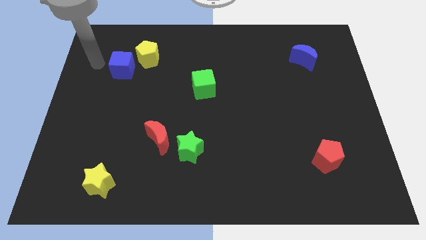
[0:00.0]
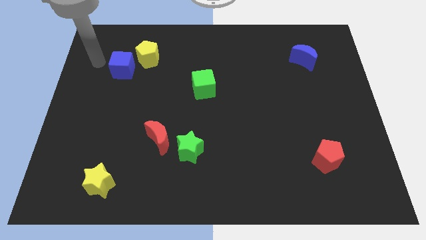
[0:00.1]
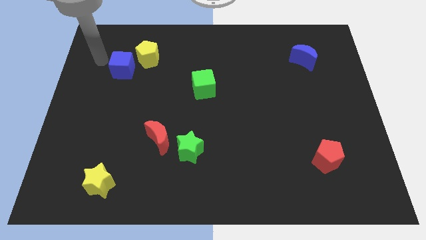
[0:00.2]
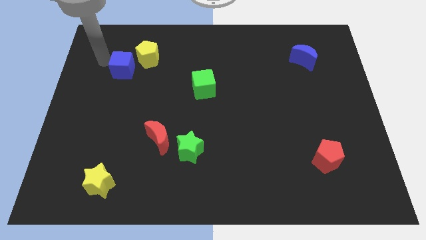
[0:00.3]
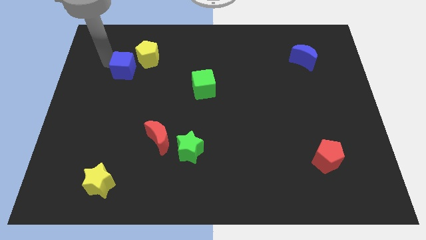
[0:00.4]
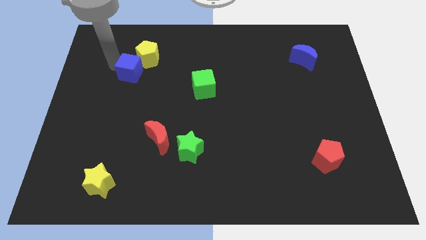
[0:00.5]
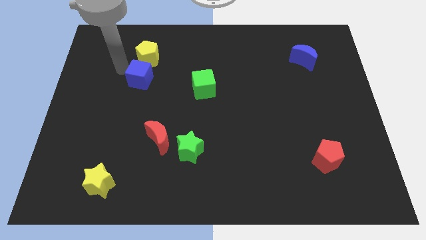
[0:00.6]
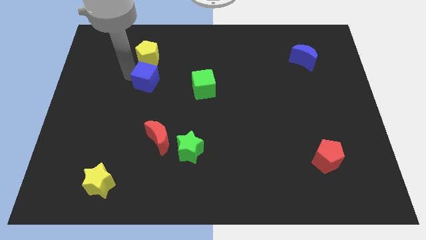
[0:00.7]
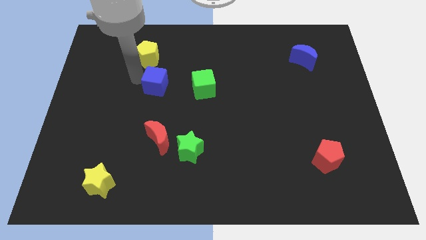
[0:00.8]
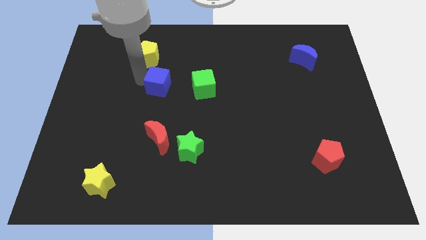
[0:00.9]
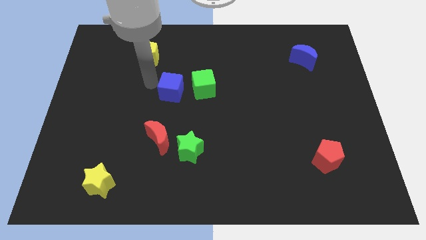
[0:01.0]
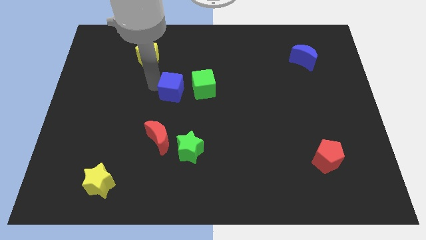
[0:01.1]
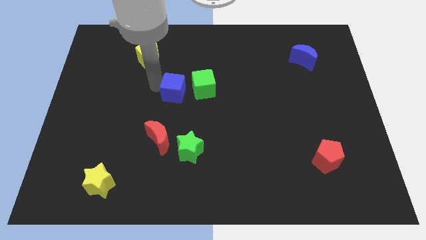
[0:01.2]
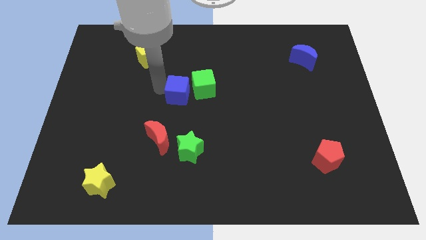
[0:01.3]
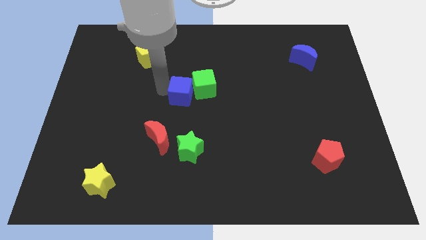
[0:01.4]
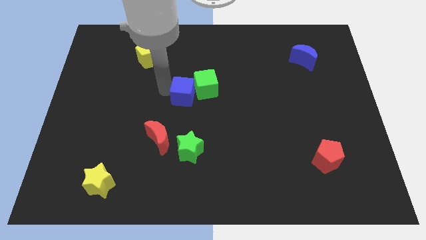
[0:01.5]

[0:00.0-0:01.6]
move the blue cube into the left side of the green cube

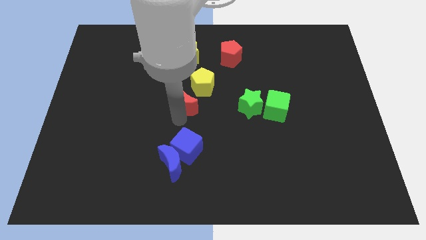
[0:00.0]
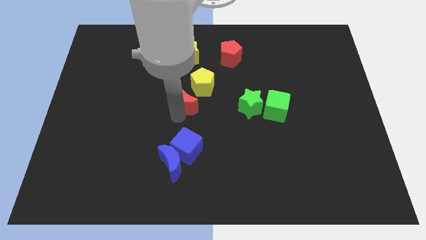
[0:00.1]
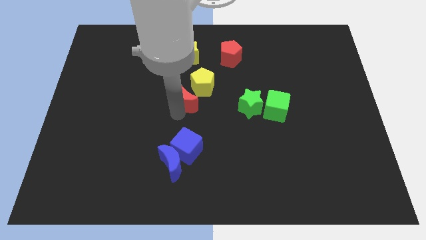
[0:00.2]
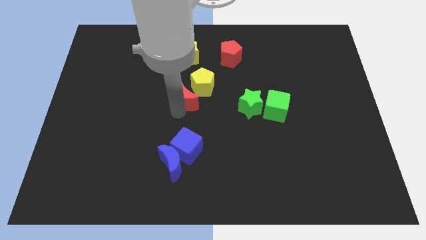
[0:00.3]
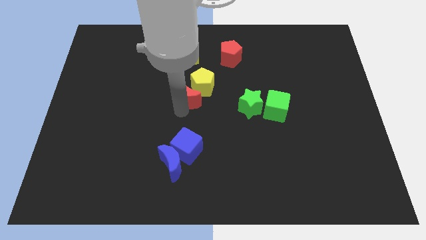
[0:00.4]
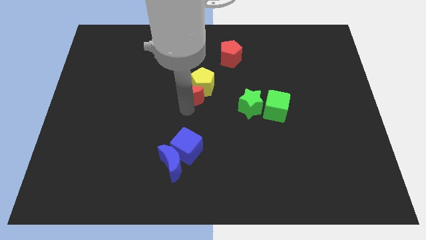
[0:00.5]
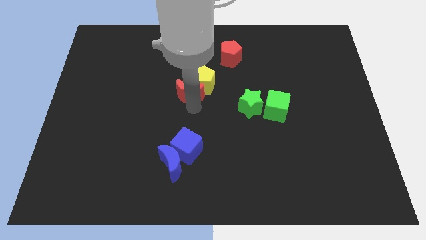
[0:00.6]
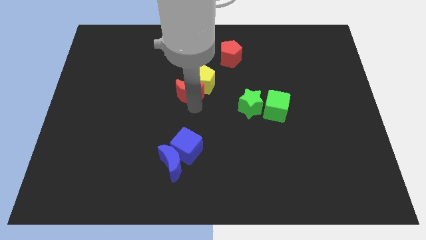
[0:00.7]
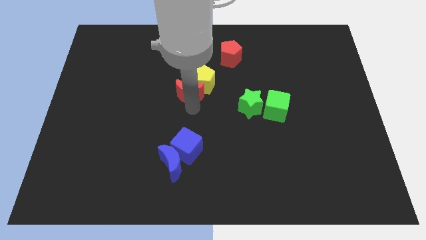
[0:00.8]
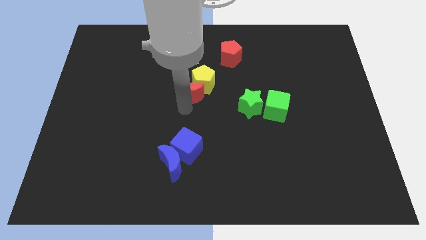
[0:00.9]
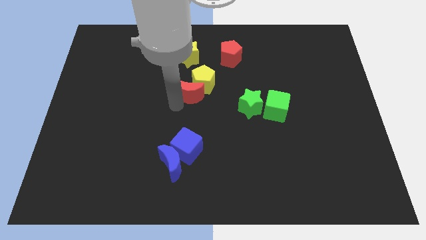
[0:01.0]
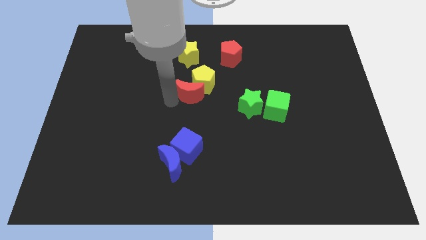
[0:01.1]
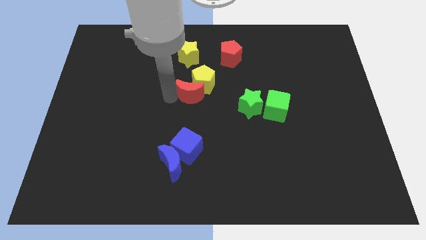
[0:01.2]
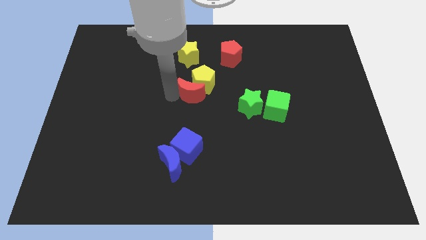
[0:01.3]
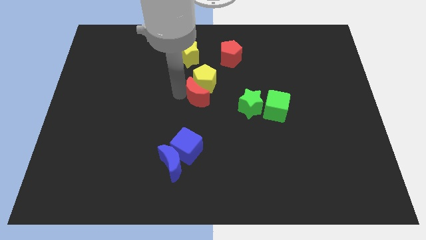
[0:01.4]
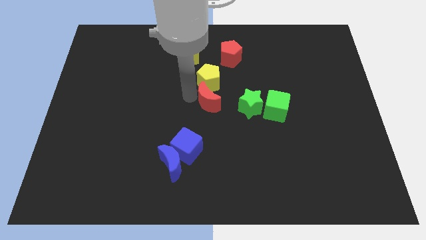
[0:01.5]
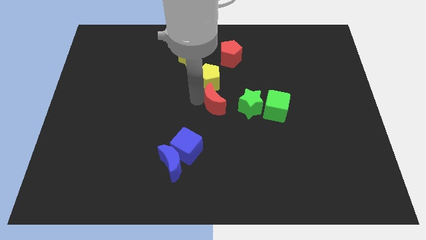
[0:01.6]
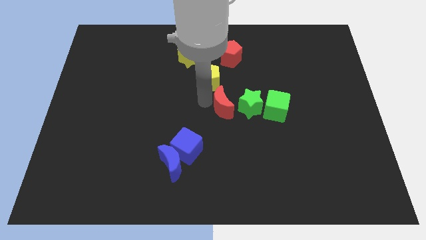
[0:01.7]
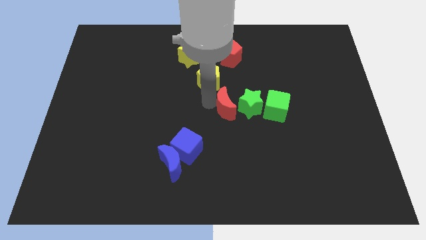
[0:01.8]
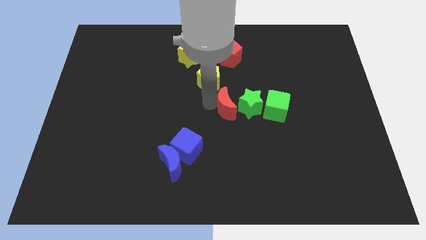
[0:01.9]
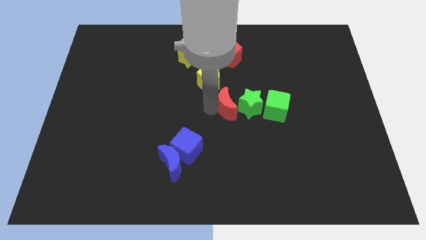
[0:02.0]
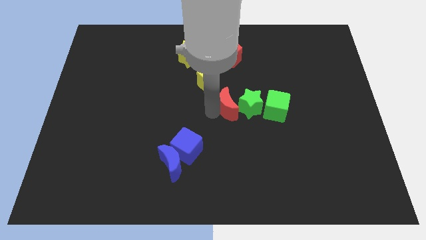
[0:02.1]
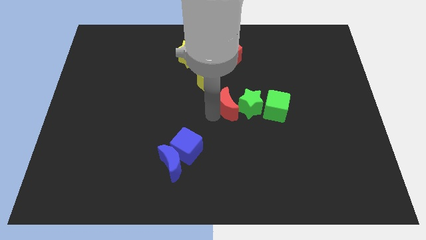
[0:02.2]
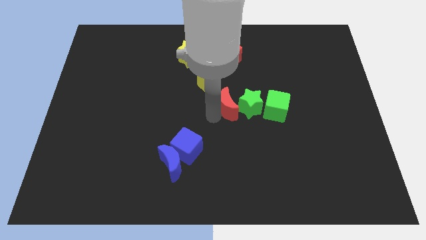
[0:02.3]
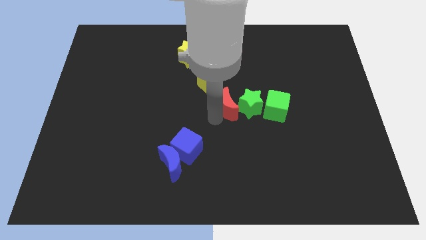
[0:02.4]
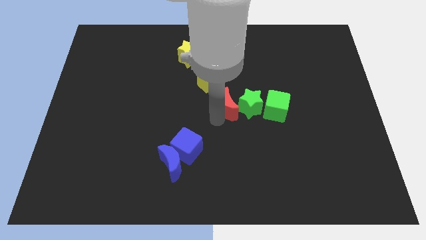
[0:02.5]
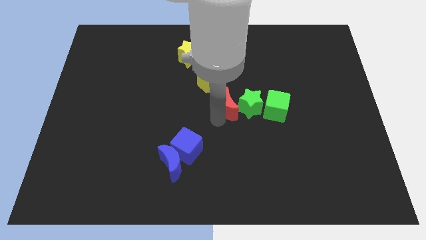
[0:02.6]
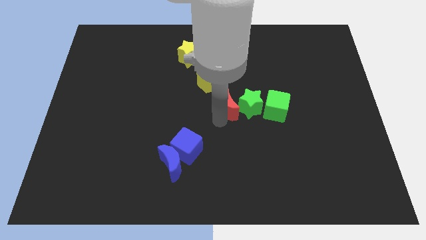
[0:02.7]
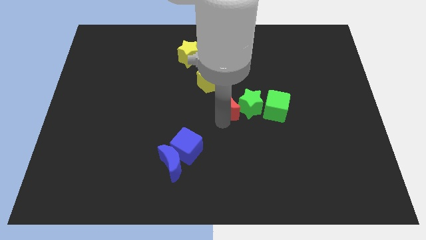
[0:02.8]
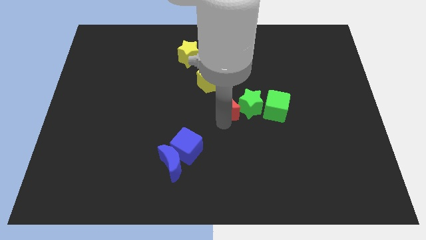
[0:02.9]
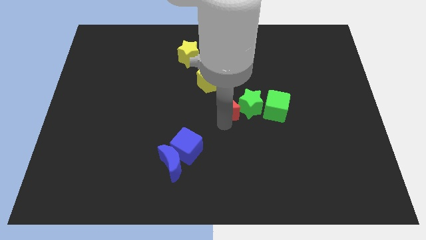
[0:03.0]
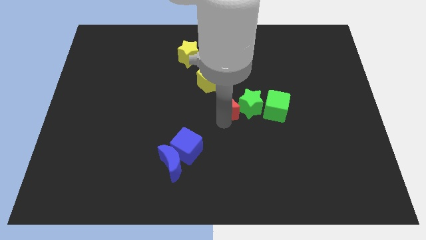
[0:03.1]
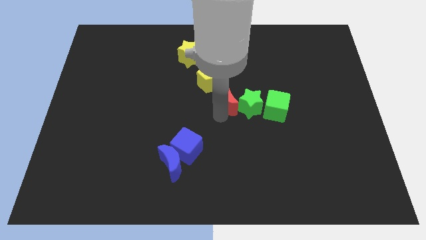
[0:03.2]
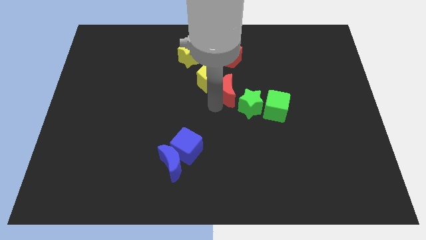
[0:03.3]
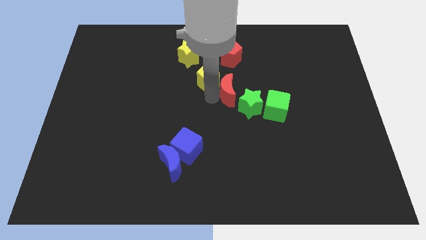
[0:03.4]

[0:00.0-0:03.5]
place the red moon between the green star and yellow pentagon

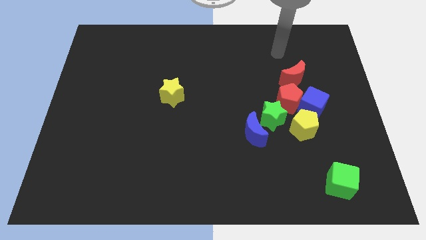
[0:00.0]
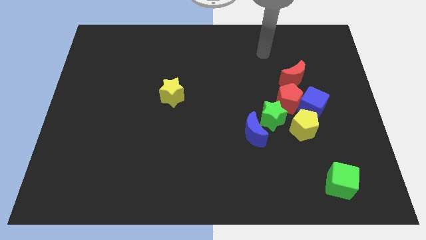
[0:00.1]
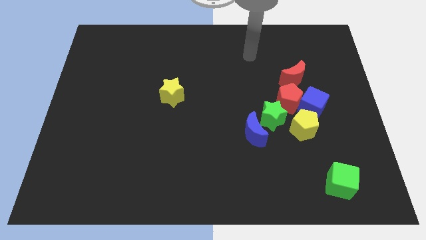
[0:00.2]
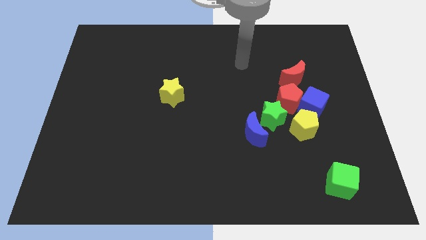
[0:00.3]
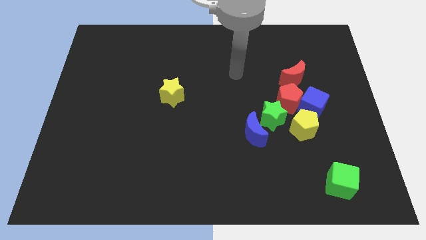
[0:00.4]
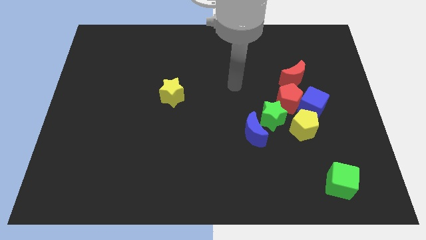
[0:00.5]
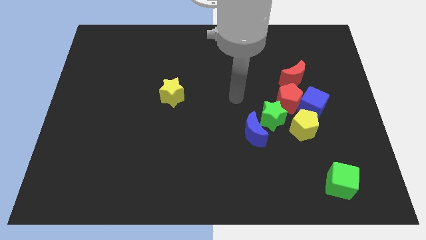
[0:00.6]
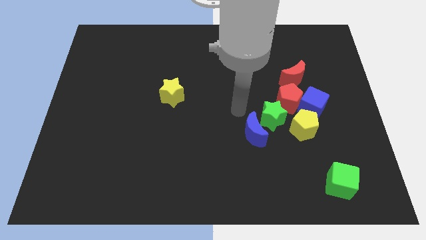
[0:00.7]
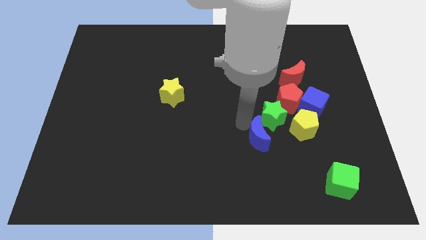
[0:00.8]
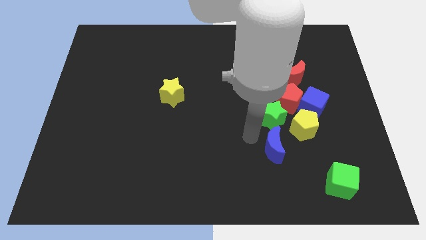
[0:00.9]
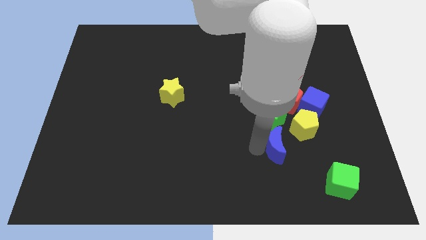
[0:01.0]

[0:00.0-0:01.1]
move your arm towards the blue crescent

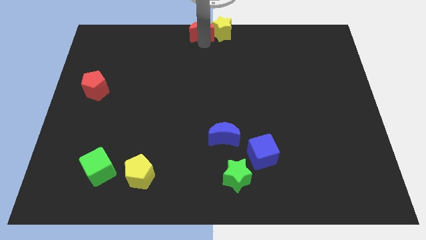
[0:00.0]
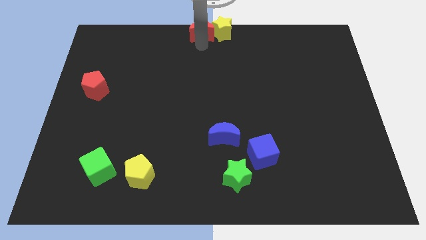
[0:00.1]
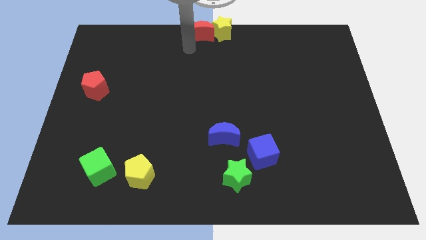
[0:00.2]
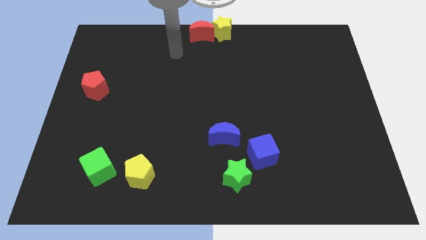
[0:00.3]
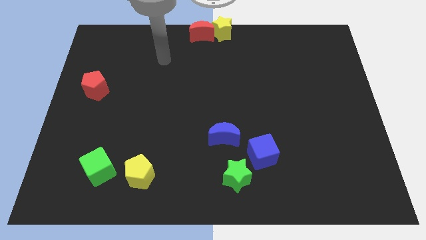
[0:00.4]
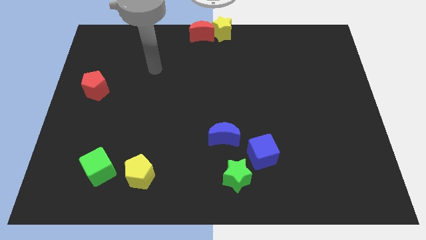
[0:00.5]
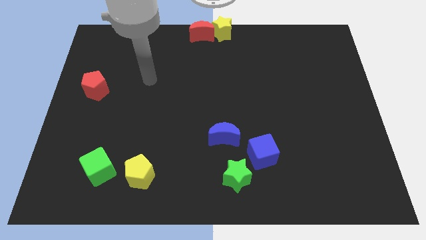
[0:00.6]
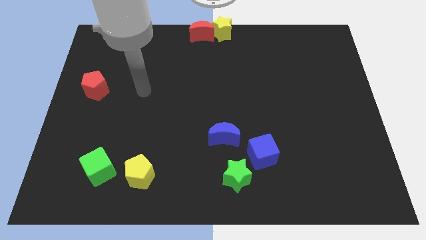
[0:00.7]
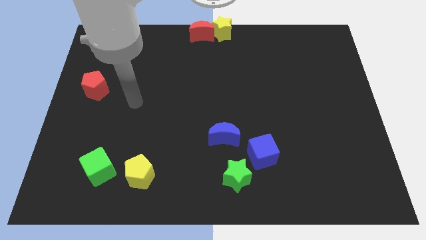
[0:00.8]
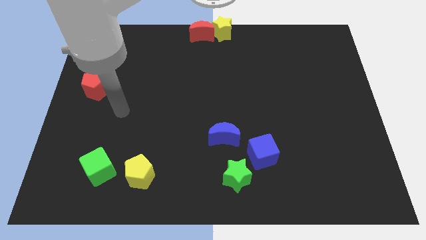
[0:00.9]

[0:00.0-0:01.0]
move the arm away from the red moon

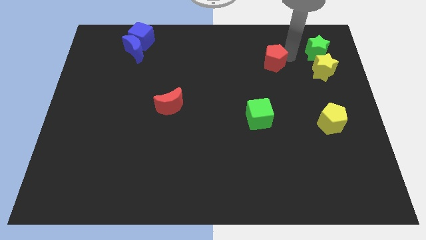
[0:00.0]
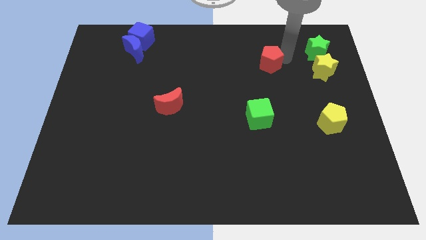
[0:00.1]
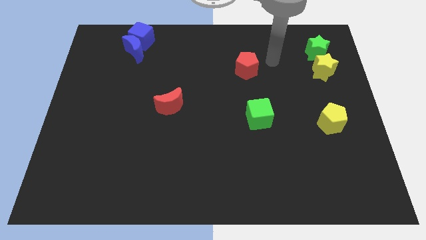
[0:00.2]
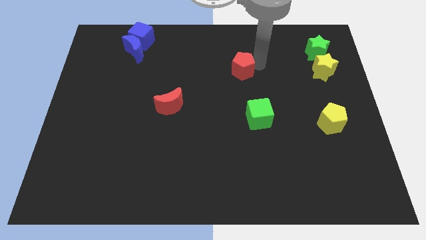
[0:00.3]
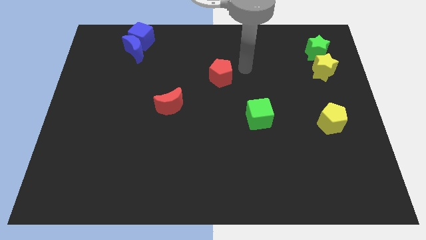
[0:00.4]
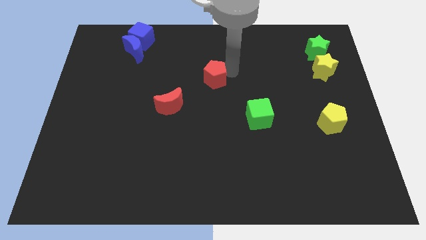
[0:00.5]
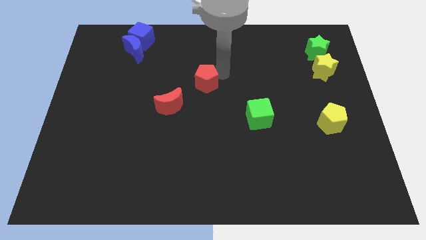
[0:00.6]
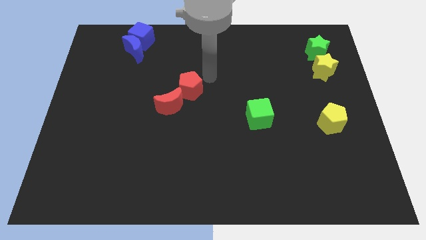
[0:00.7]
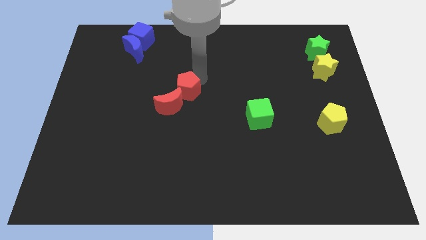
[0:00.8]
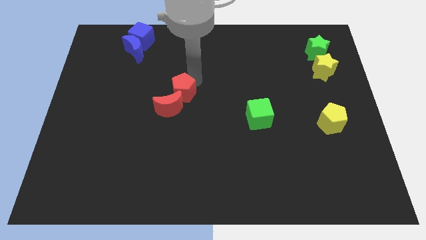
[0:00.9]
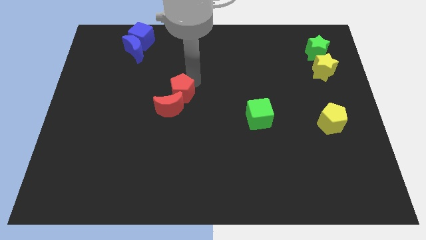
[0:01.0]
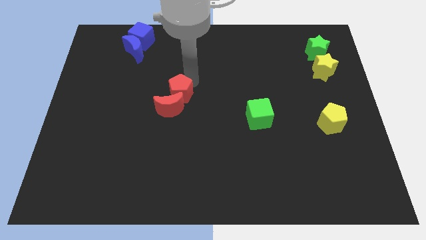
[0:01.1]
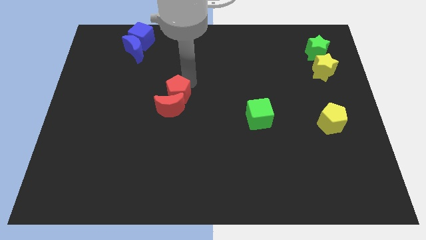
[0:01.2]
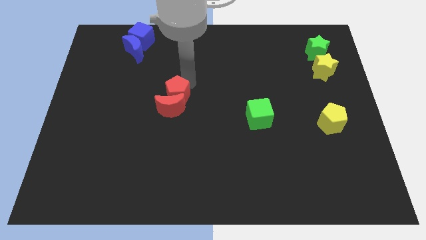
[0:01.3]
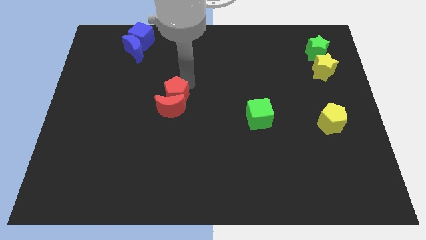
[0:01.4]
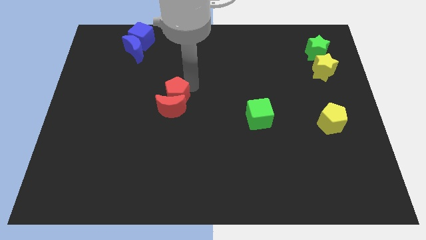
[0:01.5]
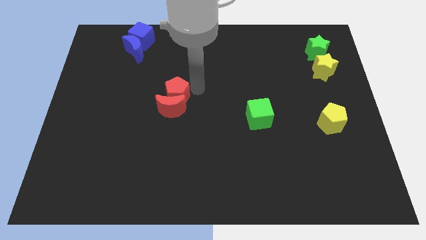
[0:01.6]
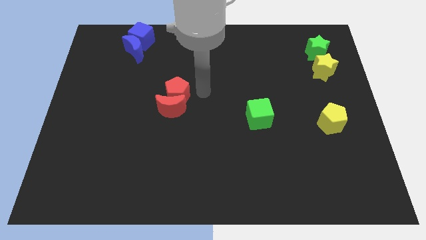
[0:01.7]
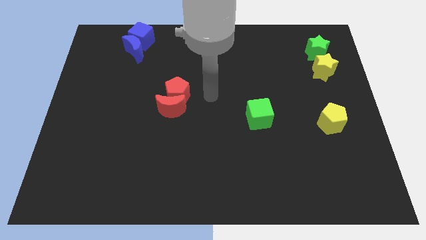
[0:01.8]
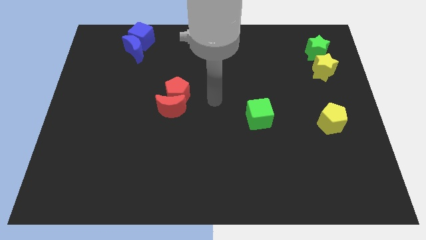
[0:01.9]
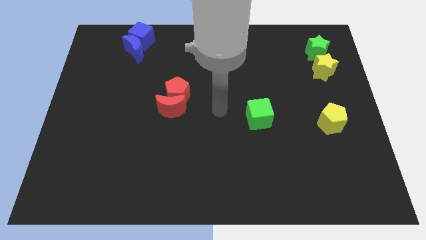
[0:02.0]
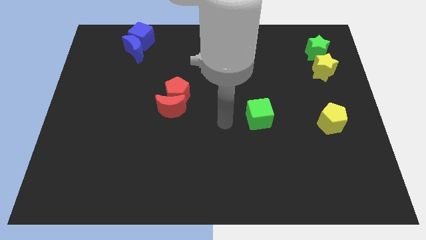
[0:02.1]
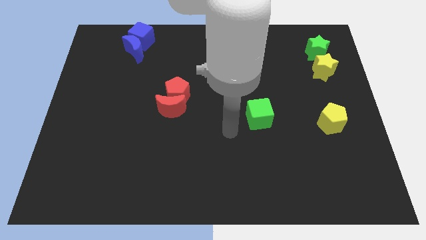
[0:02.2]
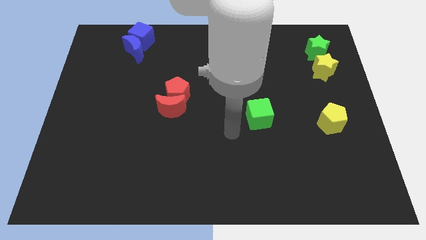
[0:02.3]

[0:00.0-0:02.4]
push the red pentagon into the red moon
